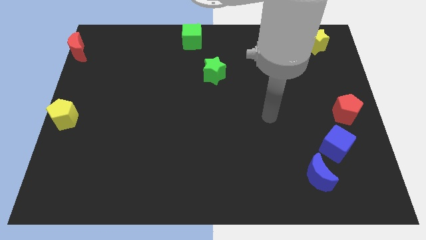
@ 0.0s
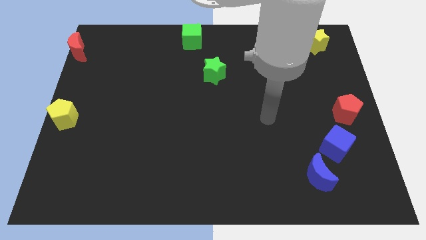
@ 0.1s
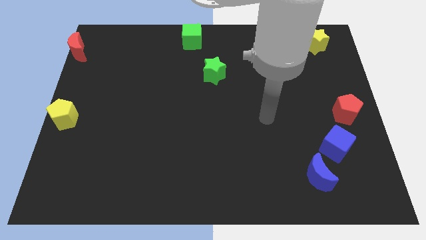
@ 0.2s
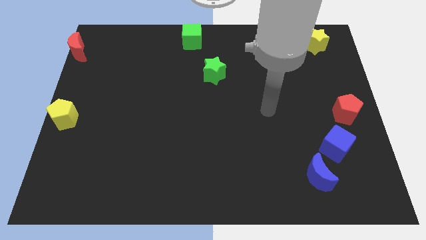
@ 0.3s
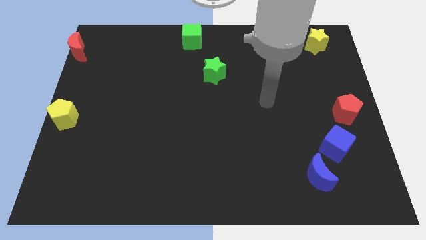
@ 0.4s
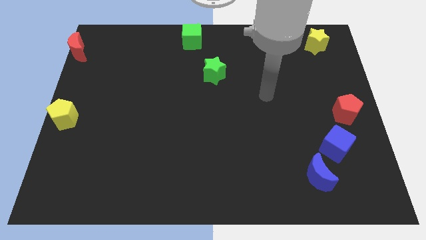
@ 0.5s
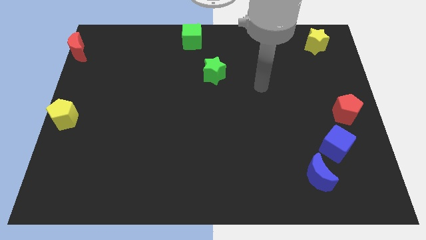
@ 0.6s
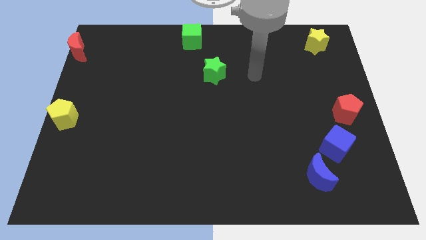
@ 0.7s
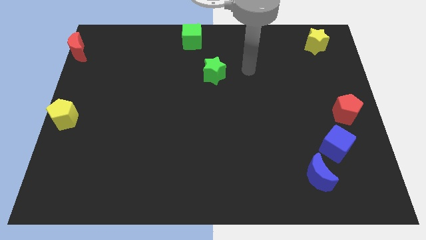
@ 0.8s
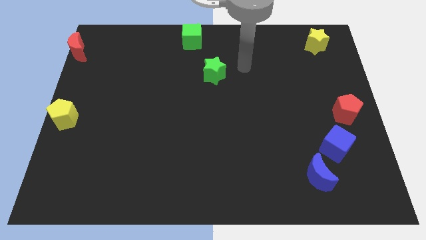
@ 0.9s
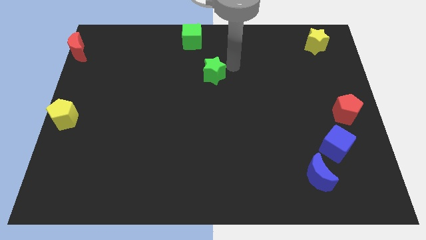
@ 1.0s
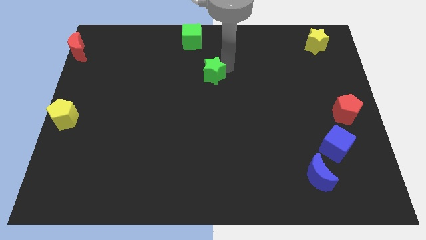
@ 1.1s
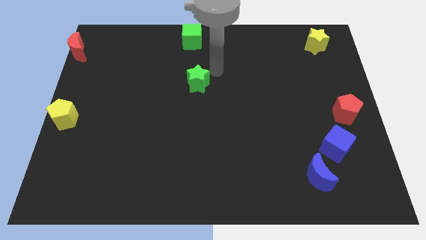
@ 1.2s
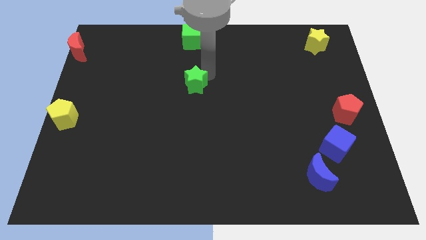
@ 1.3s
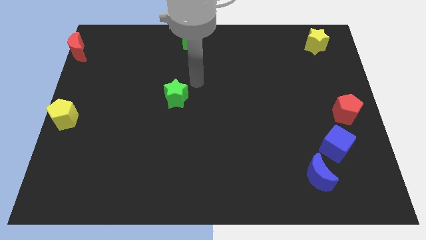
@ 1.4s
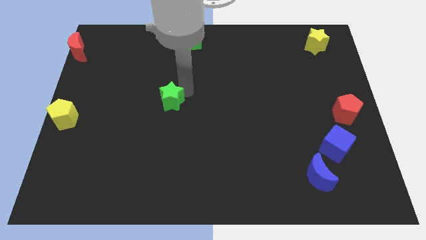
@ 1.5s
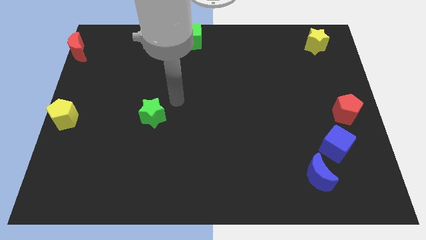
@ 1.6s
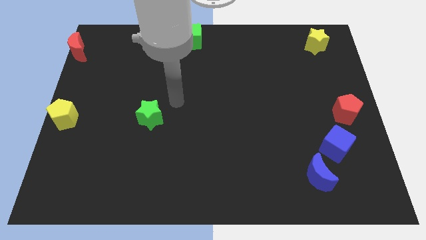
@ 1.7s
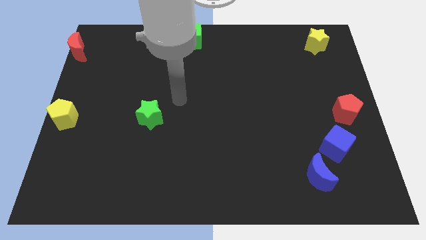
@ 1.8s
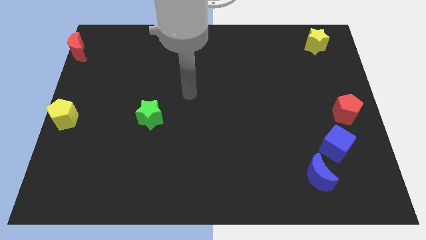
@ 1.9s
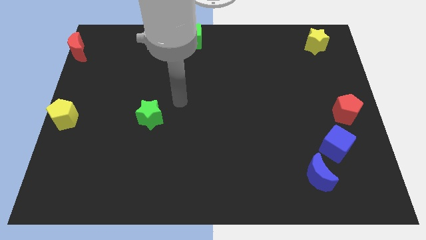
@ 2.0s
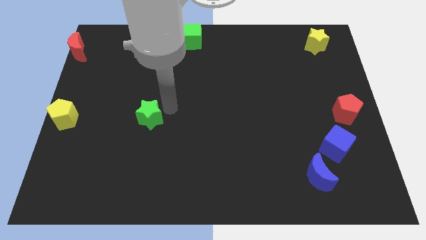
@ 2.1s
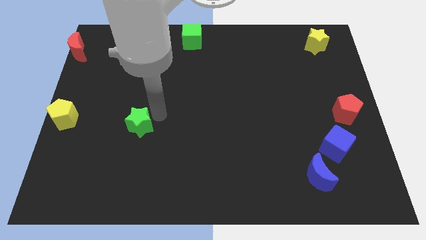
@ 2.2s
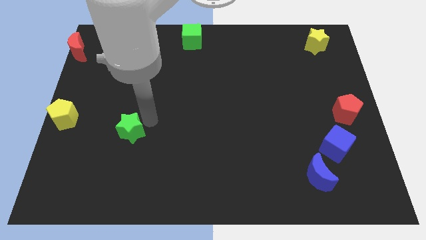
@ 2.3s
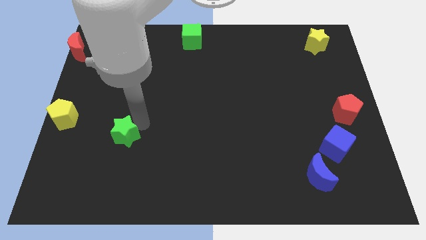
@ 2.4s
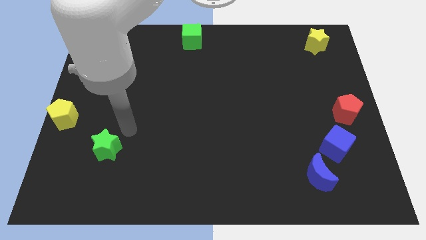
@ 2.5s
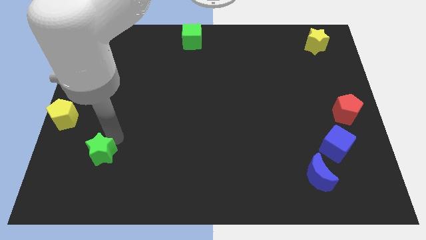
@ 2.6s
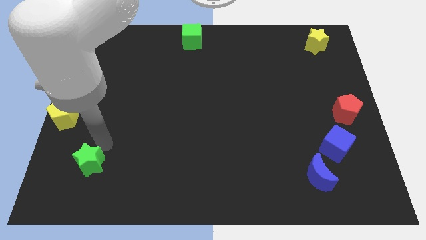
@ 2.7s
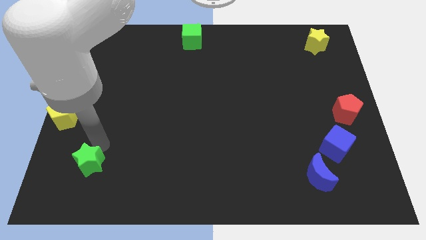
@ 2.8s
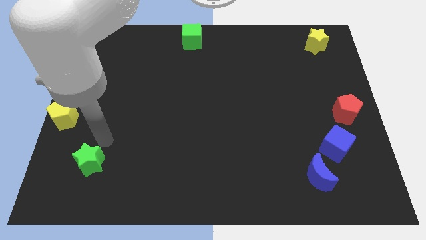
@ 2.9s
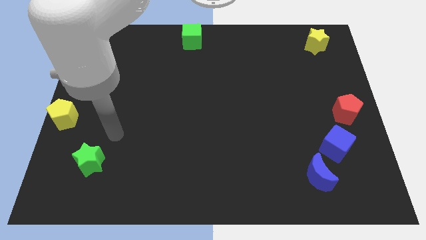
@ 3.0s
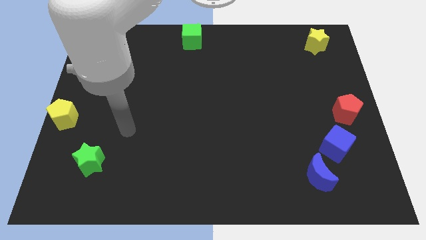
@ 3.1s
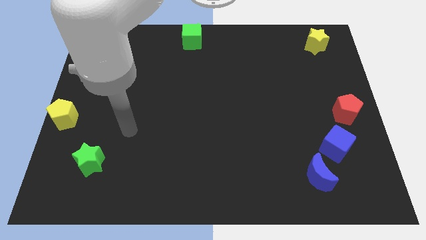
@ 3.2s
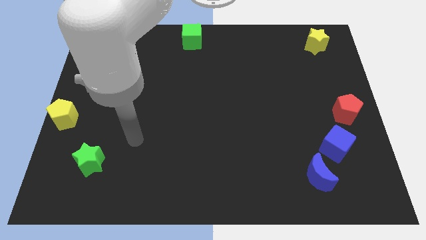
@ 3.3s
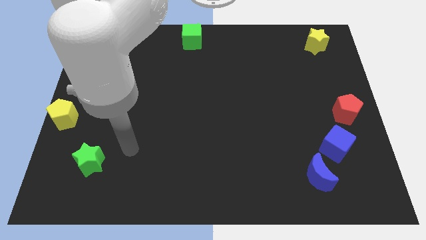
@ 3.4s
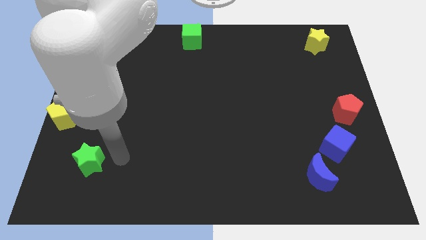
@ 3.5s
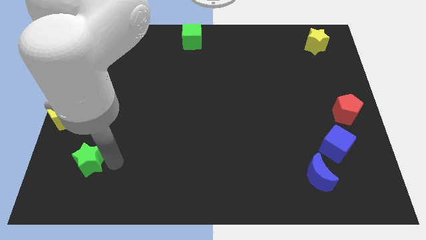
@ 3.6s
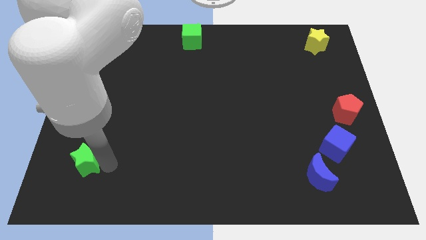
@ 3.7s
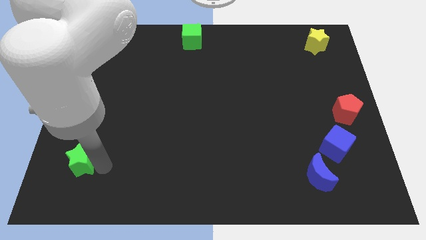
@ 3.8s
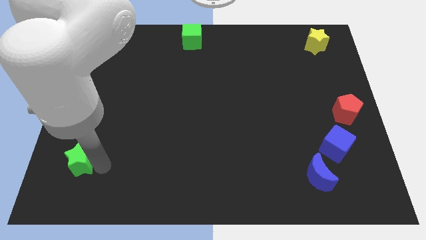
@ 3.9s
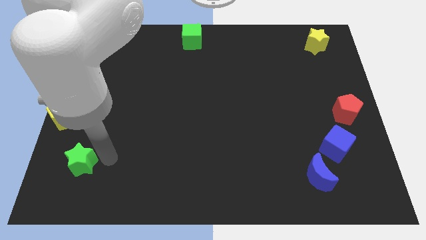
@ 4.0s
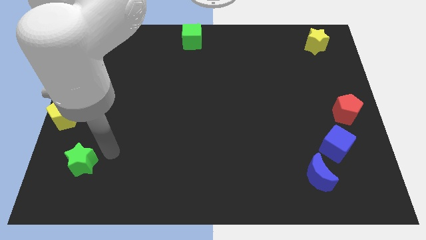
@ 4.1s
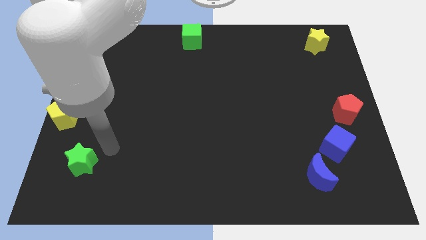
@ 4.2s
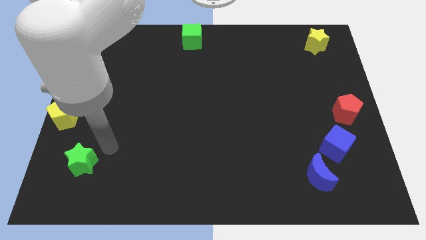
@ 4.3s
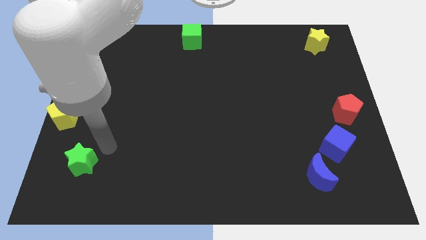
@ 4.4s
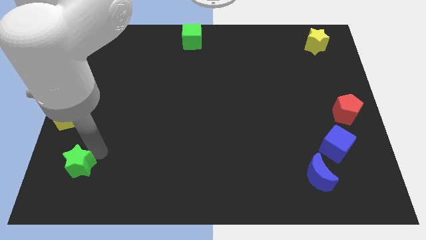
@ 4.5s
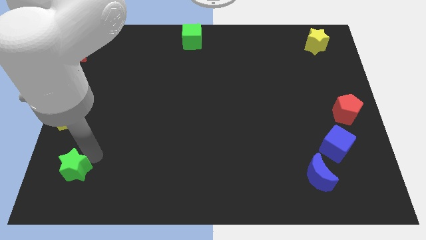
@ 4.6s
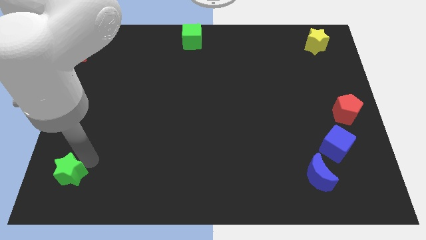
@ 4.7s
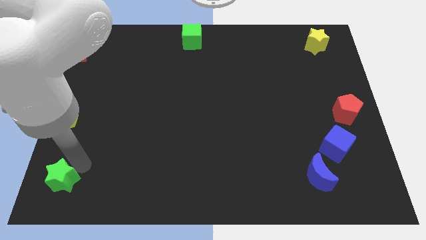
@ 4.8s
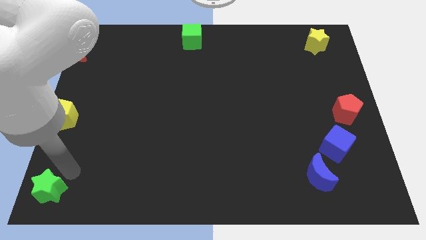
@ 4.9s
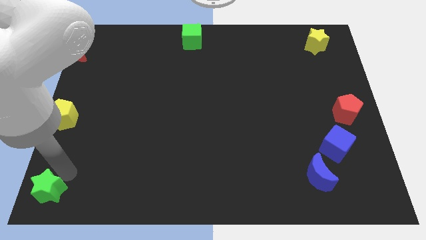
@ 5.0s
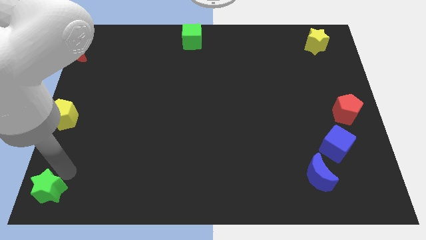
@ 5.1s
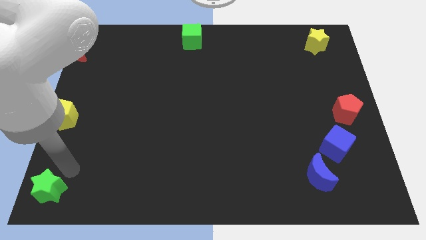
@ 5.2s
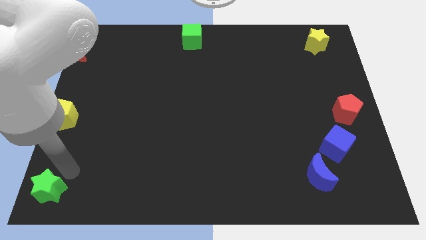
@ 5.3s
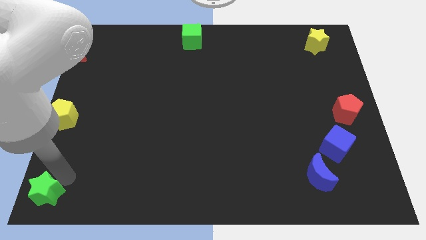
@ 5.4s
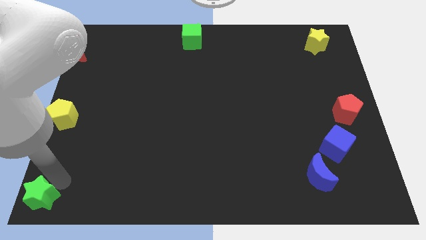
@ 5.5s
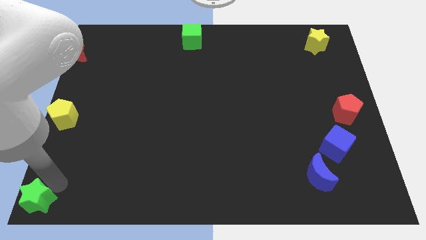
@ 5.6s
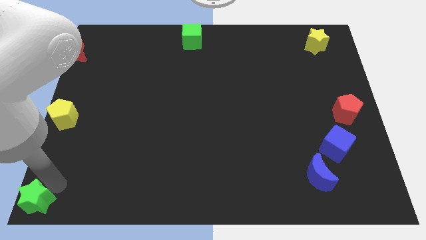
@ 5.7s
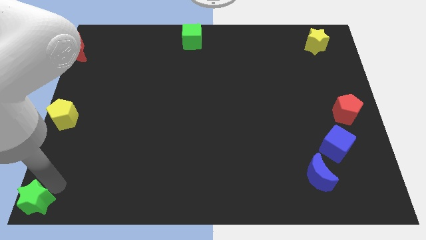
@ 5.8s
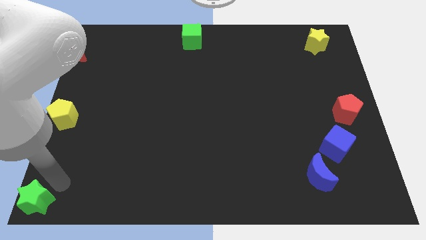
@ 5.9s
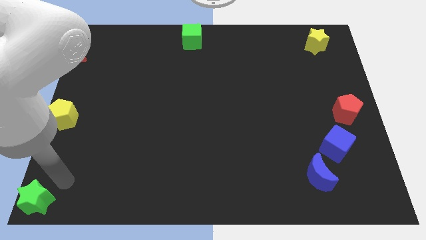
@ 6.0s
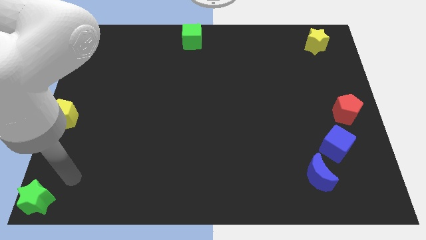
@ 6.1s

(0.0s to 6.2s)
push the green star to the bottom left corner of the board

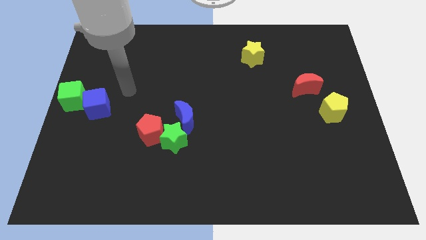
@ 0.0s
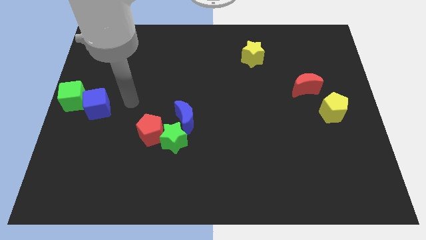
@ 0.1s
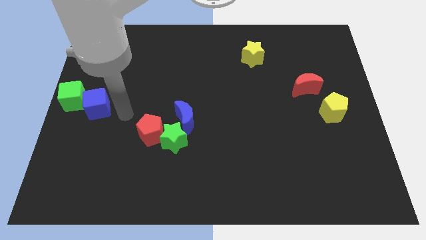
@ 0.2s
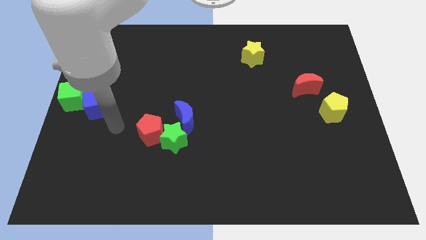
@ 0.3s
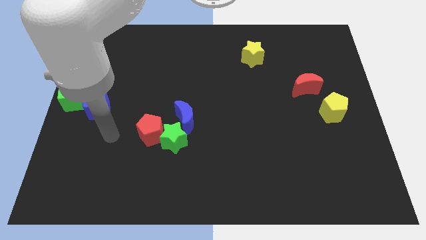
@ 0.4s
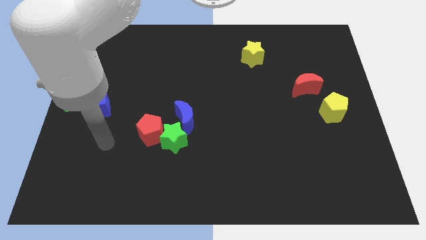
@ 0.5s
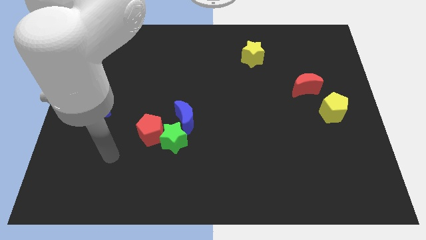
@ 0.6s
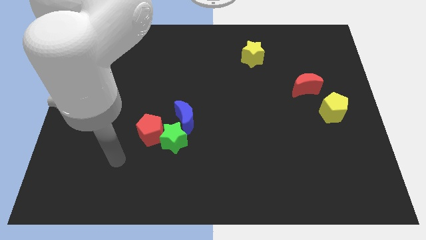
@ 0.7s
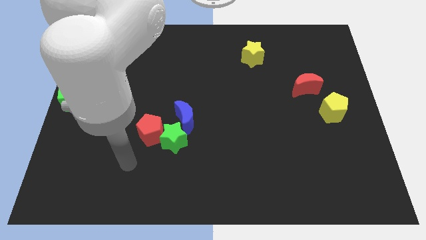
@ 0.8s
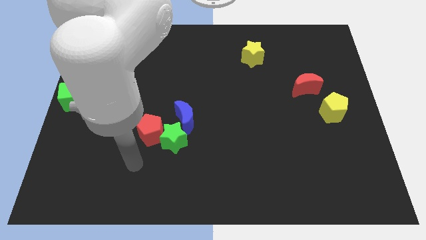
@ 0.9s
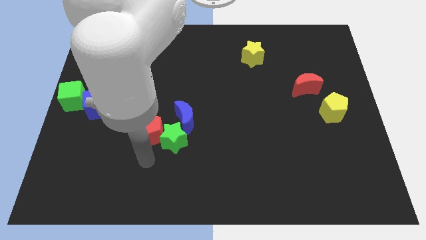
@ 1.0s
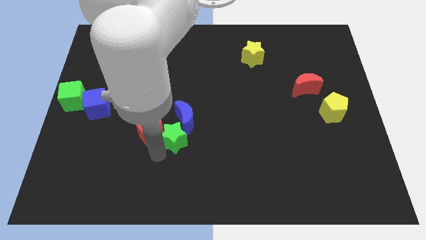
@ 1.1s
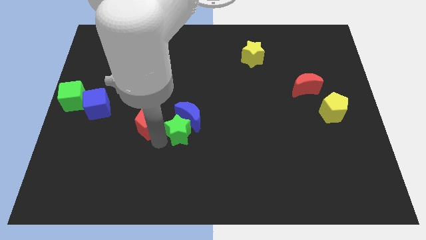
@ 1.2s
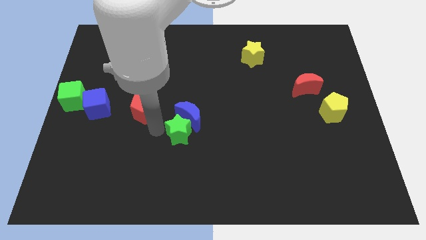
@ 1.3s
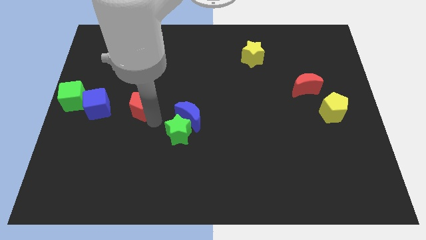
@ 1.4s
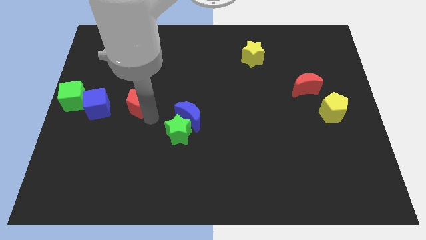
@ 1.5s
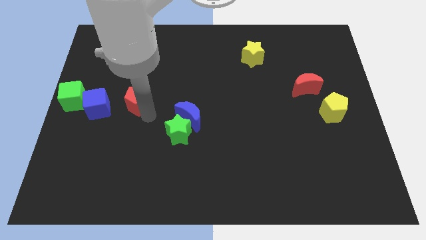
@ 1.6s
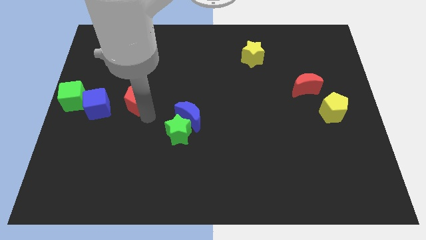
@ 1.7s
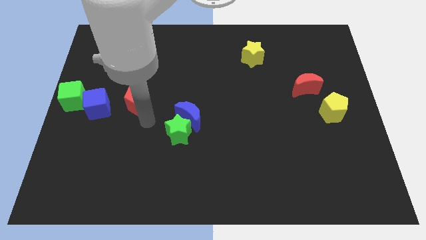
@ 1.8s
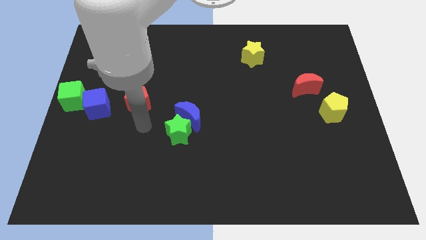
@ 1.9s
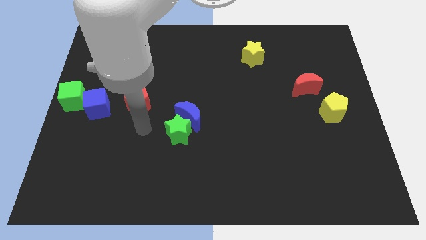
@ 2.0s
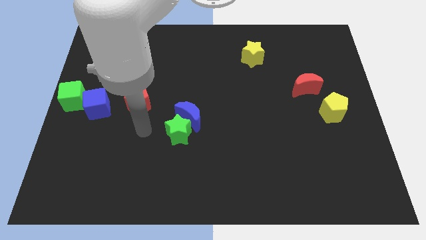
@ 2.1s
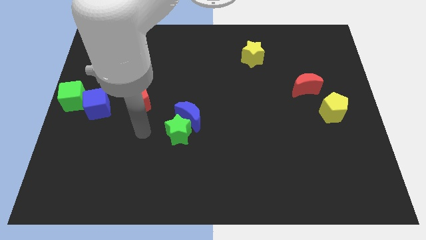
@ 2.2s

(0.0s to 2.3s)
separate the red pentagon from the green star

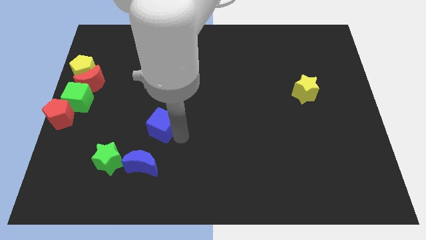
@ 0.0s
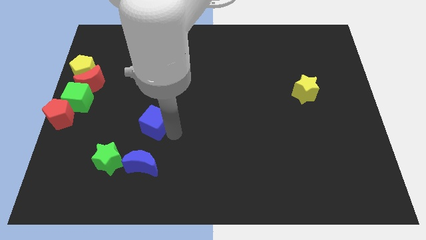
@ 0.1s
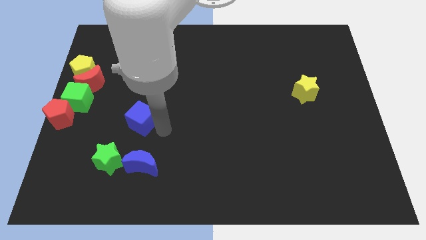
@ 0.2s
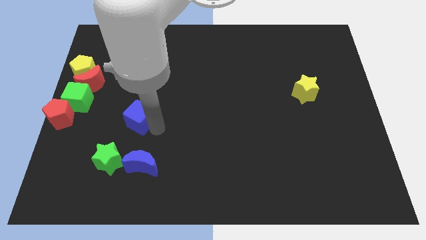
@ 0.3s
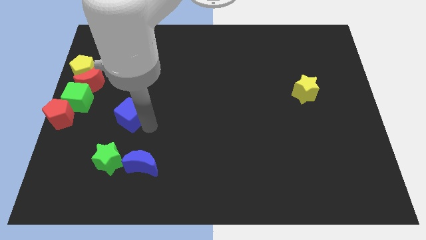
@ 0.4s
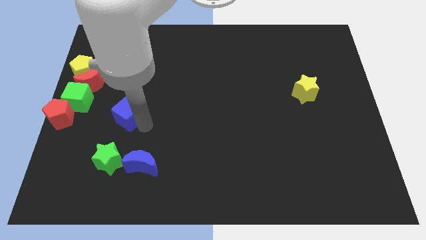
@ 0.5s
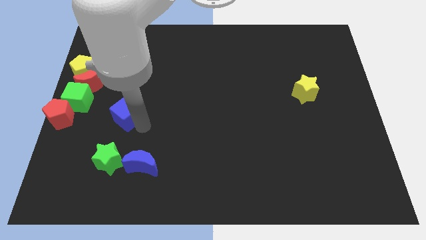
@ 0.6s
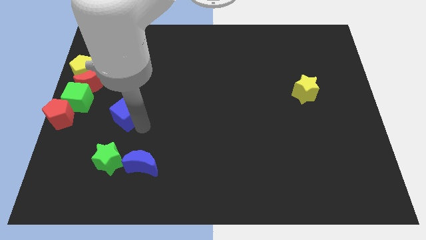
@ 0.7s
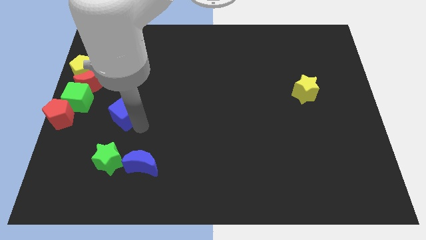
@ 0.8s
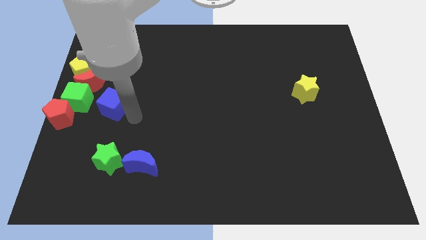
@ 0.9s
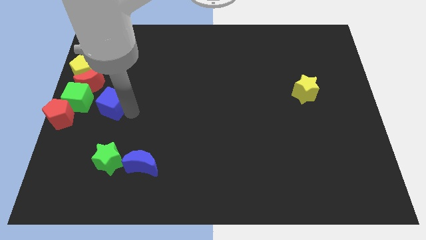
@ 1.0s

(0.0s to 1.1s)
place the blue cube at right side of the green cube
